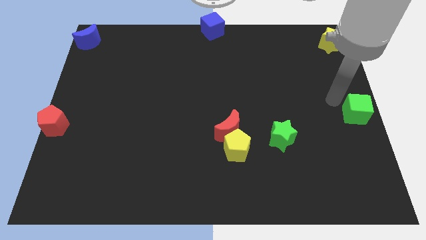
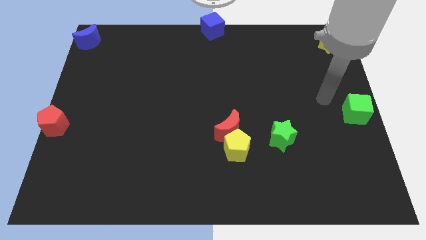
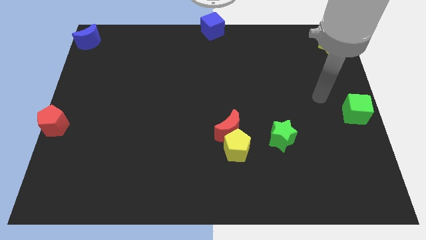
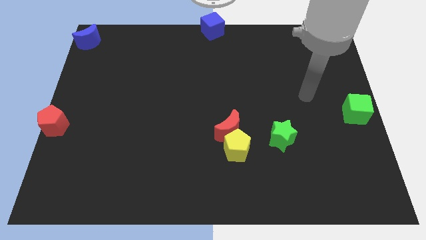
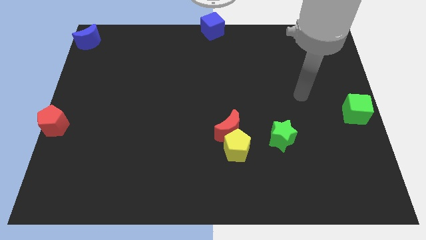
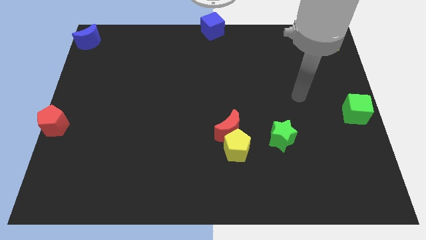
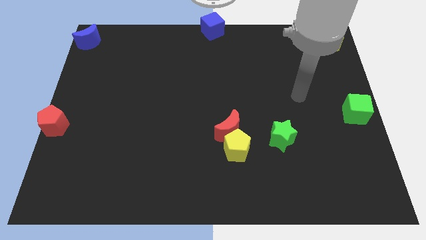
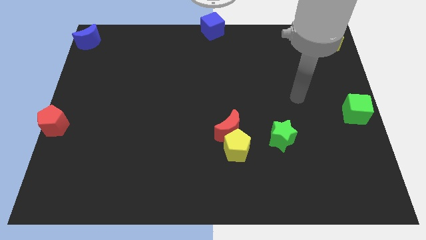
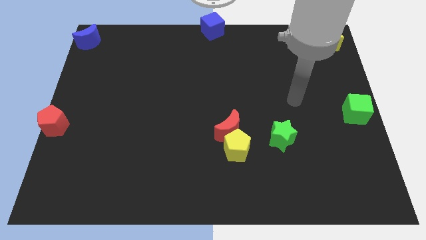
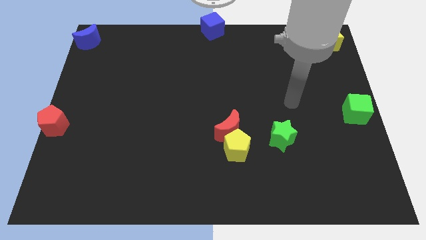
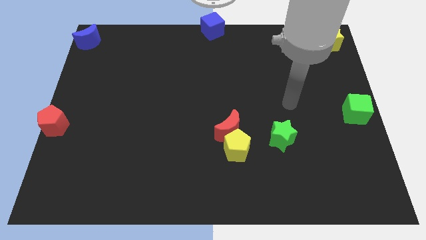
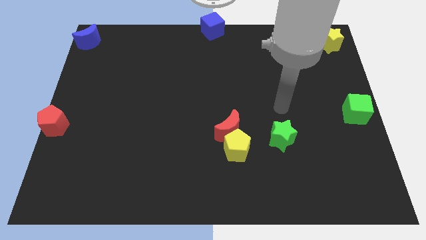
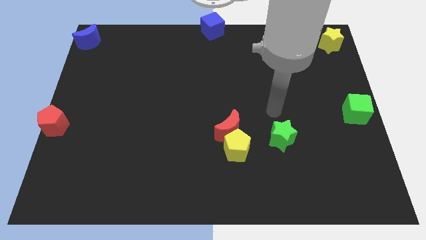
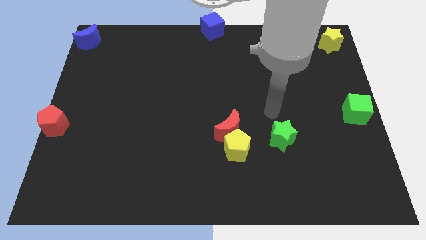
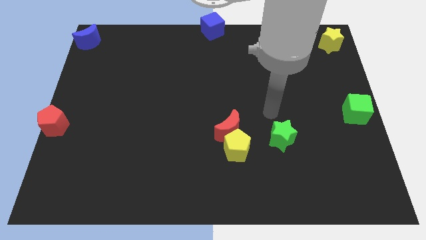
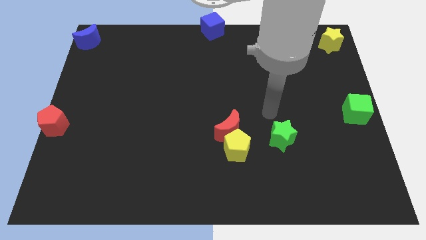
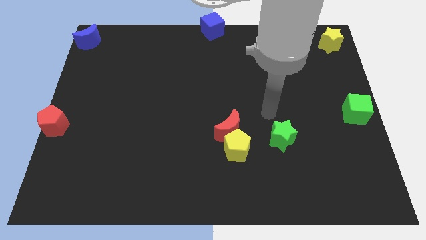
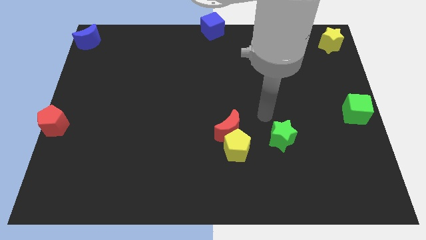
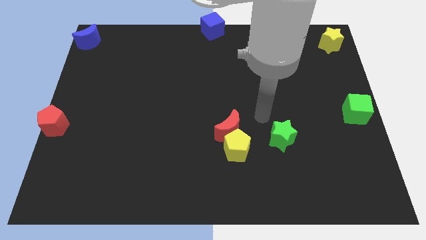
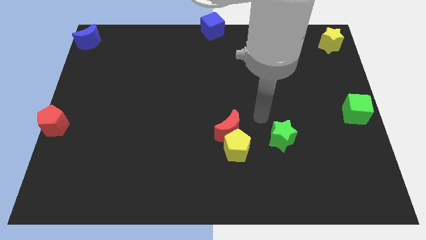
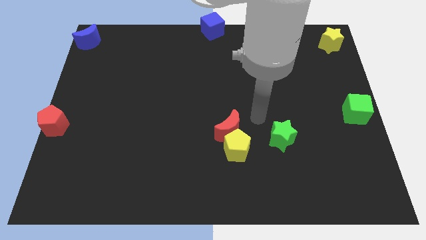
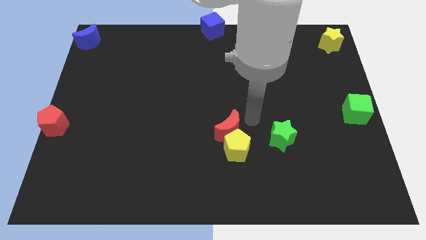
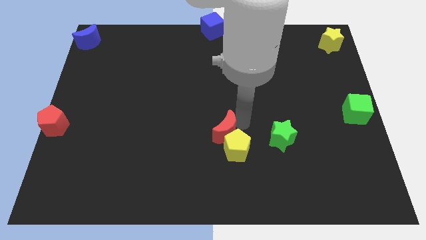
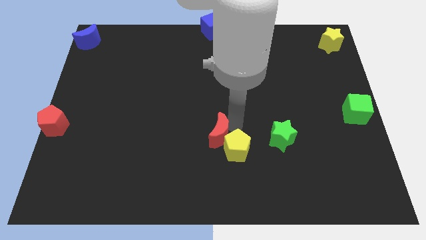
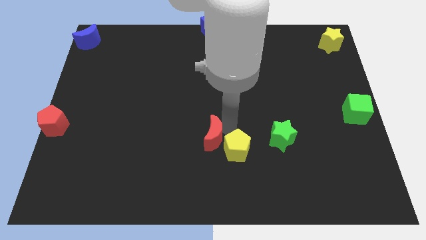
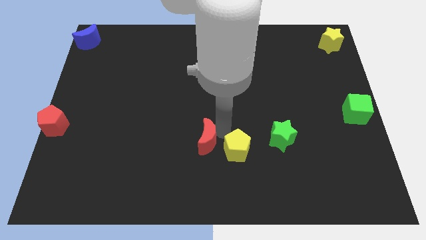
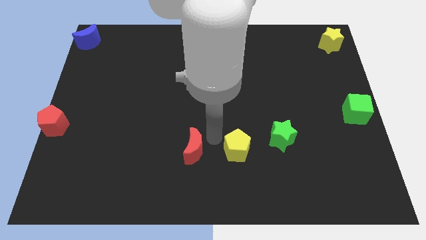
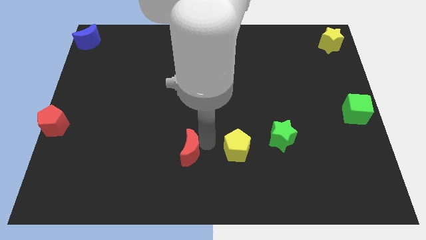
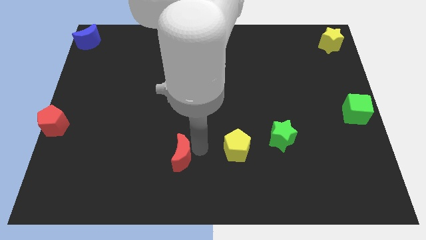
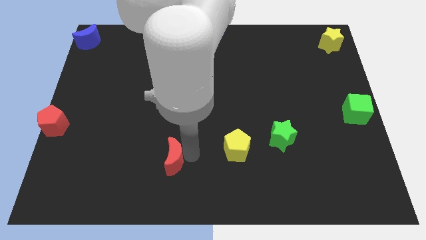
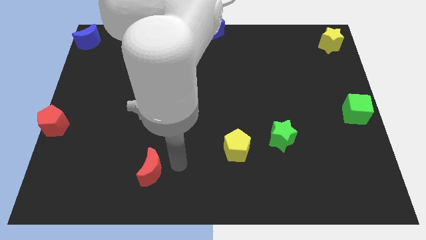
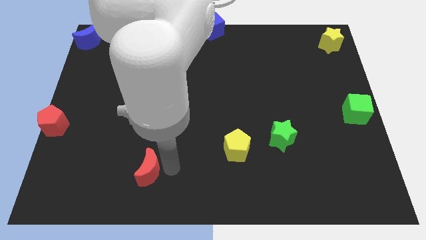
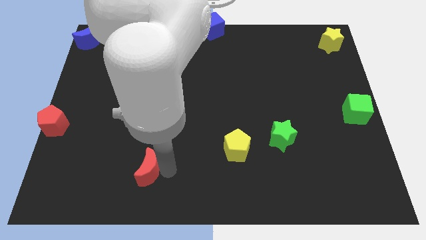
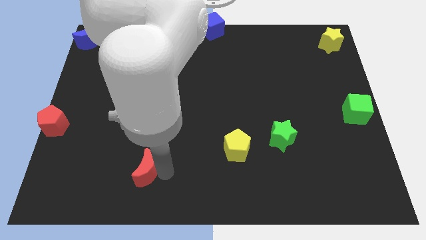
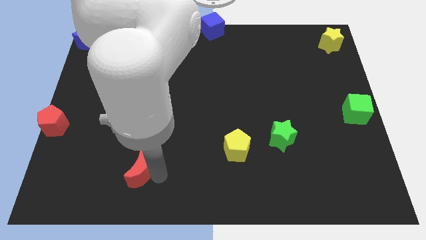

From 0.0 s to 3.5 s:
separate the red crescent from the yellow pentagon

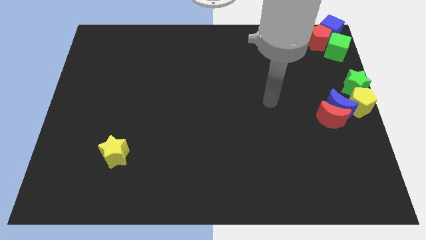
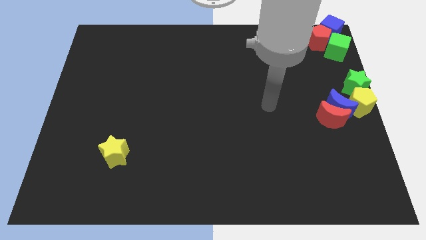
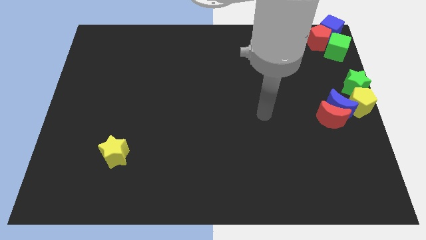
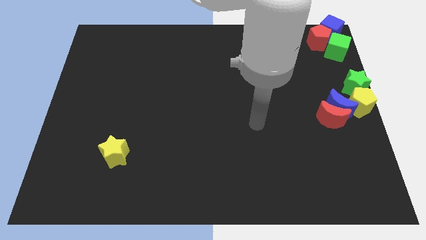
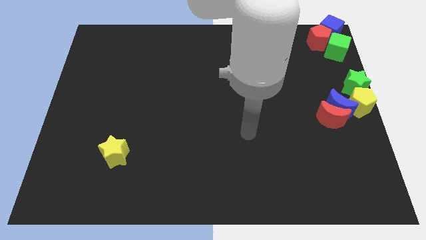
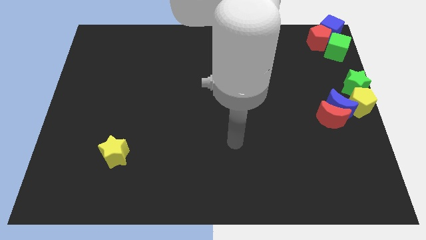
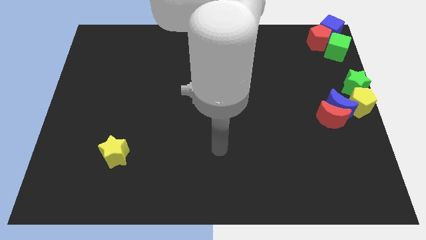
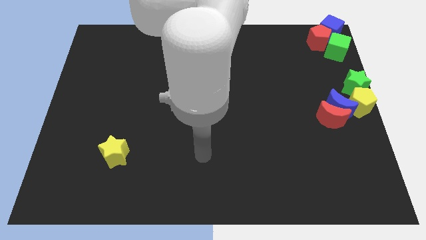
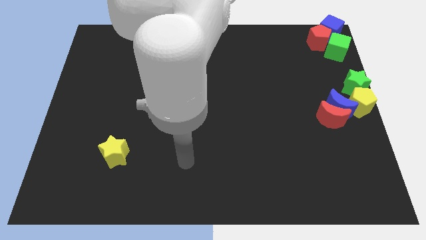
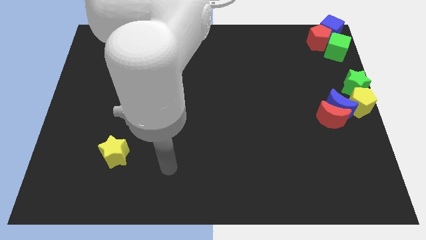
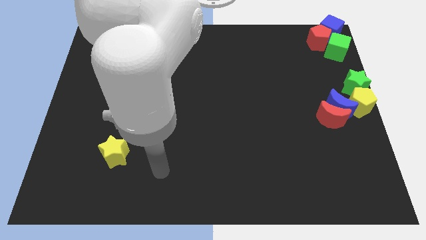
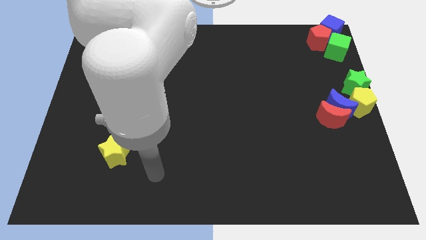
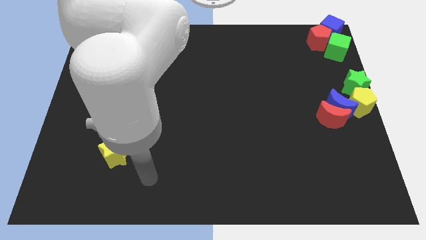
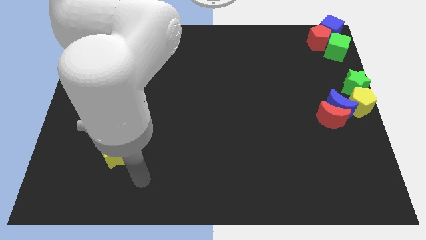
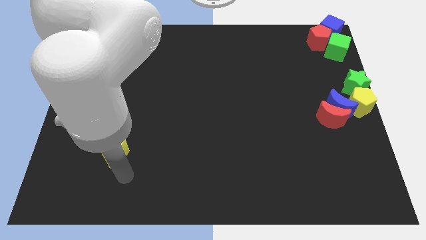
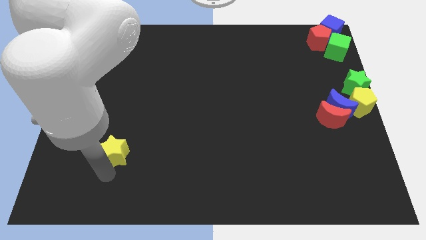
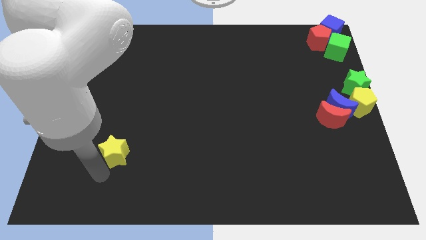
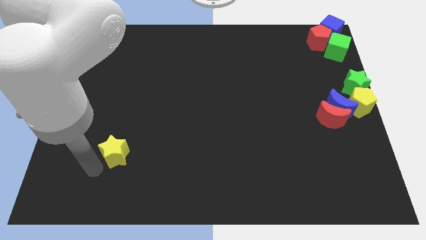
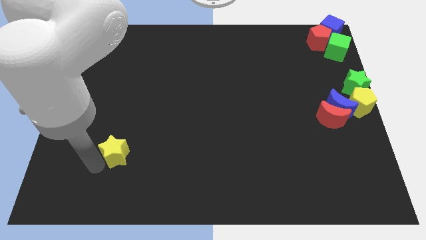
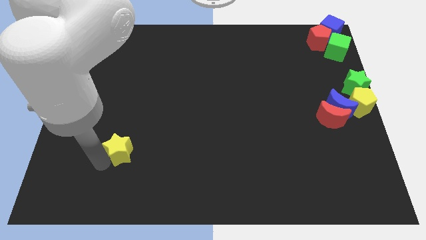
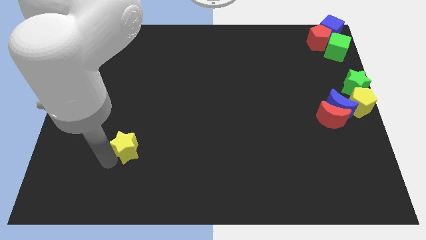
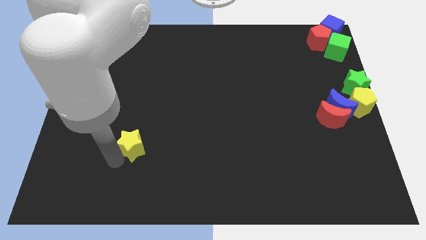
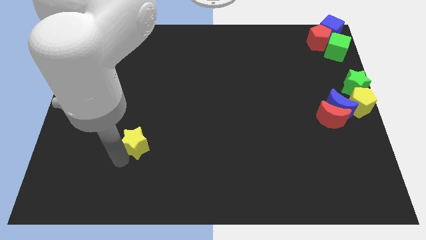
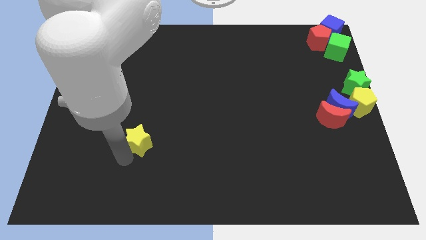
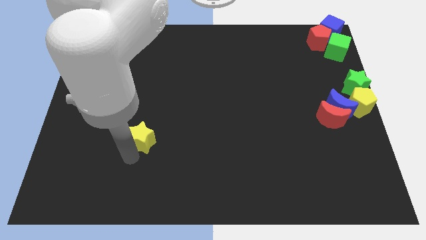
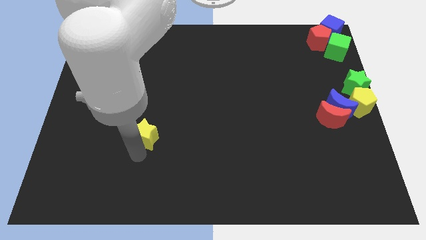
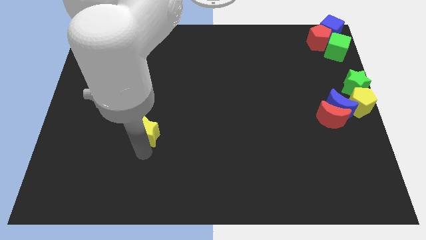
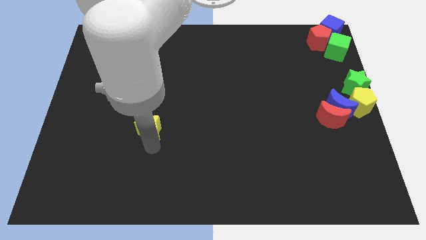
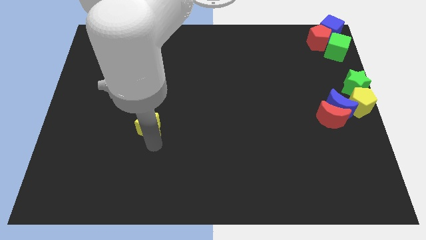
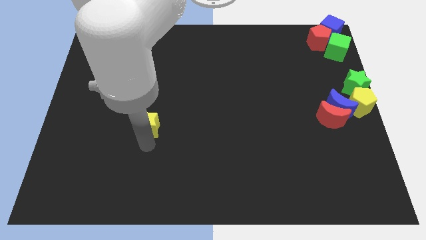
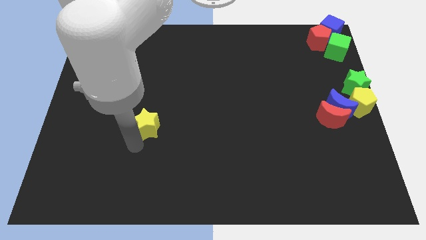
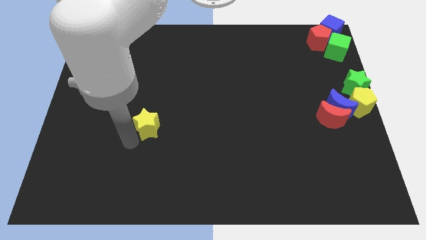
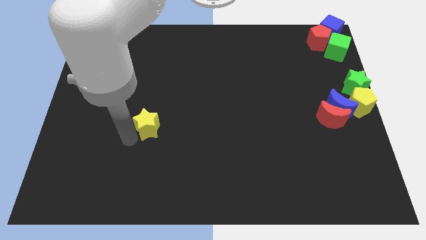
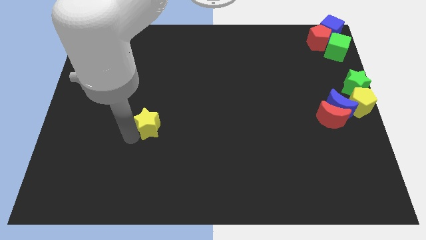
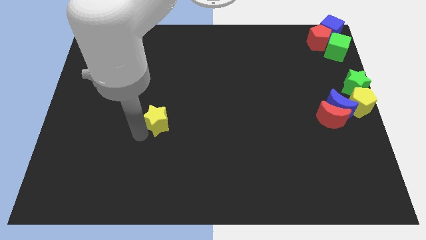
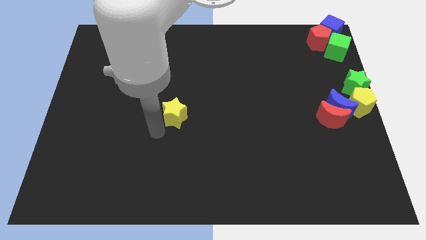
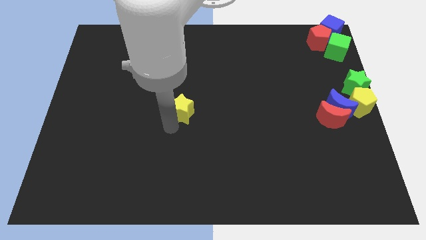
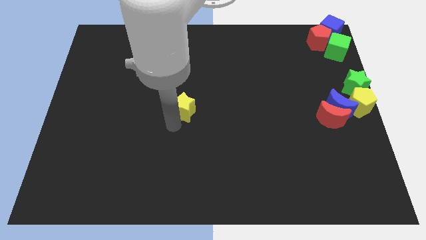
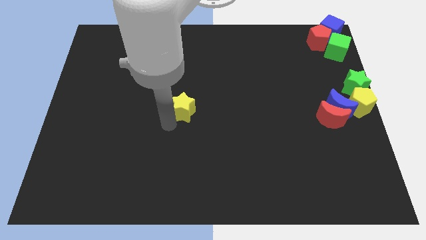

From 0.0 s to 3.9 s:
move the yellow star slightly to the center of the board

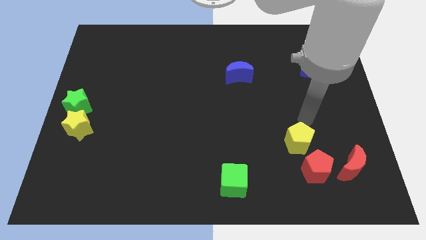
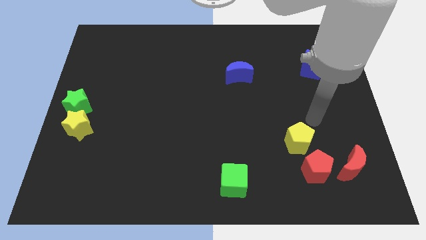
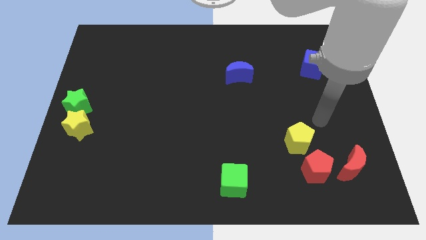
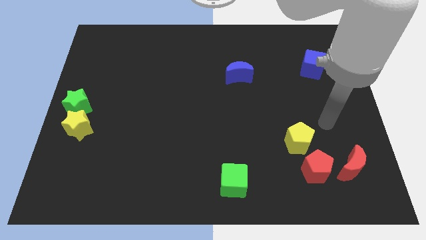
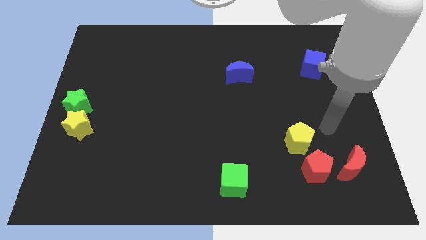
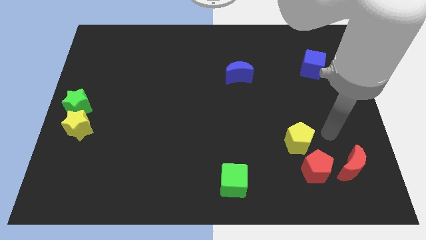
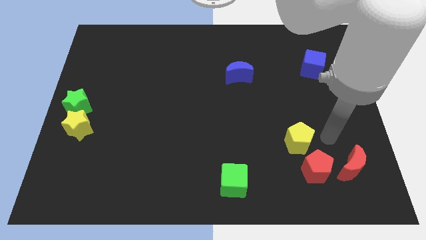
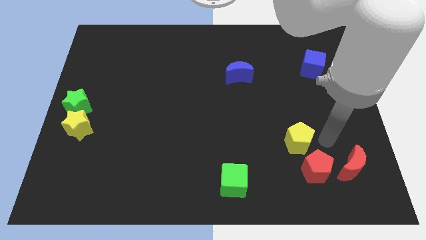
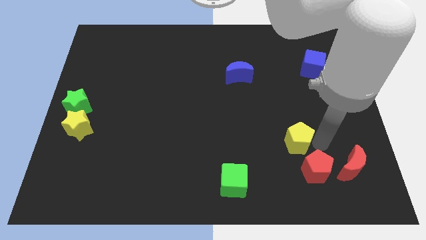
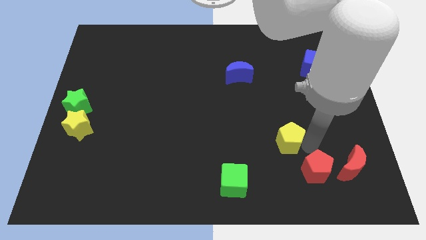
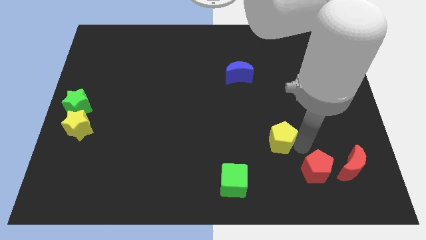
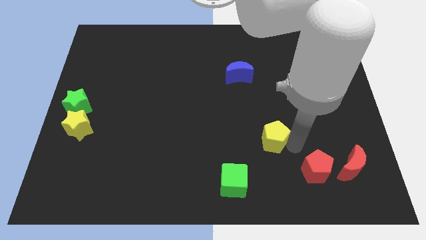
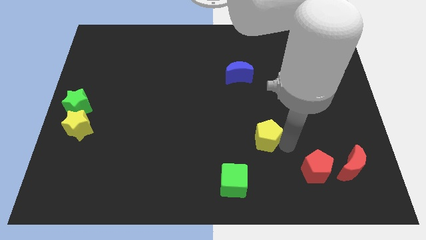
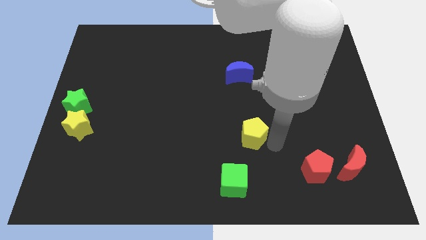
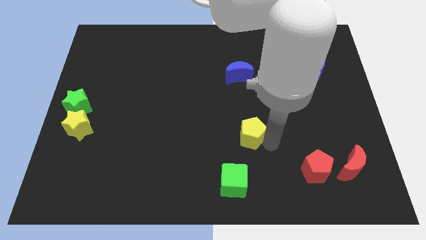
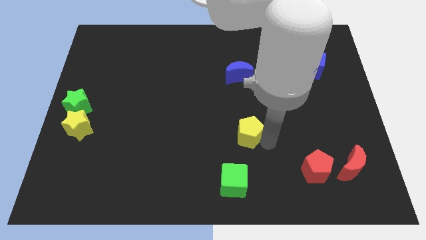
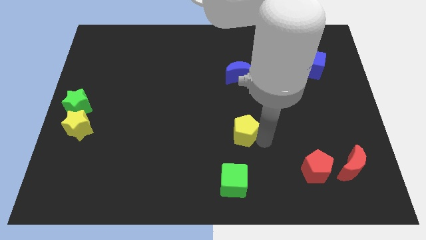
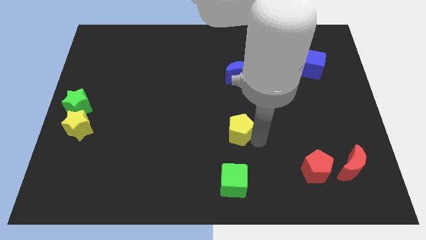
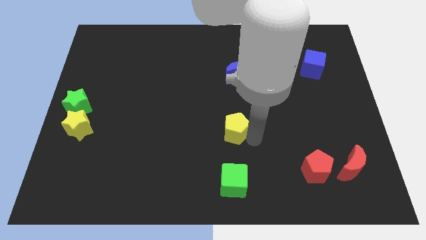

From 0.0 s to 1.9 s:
place yellow pentagon to the top of green cube
